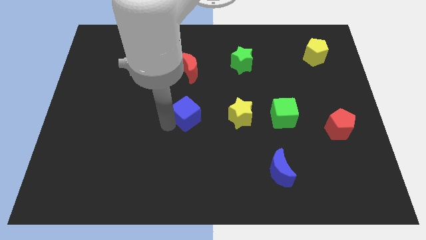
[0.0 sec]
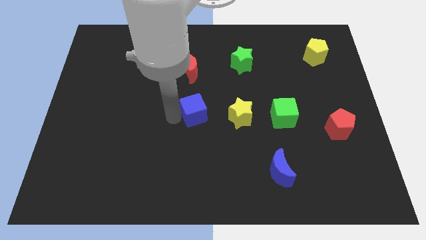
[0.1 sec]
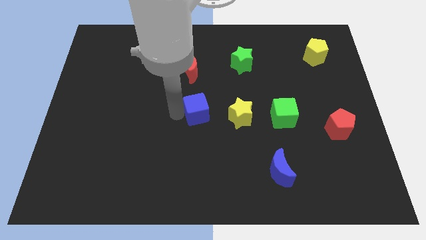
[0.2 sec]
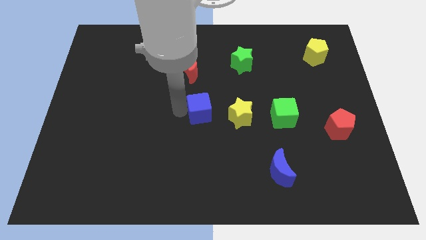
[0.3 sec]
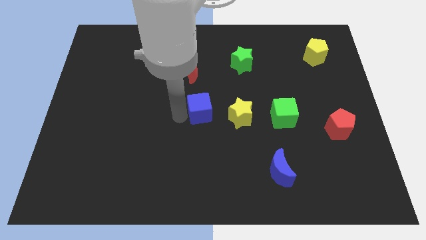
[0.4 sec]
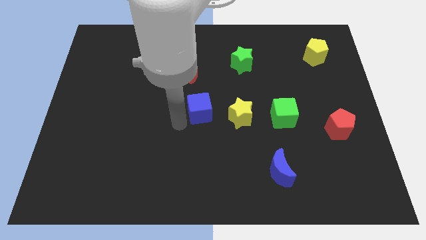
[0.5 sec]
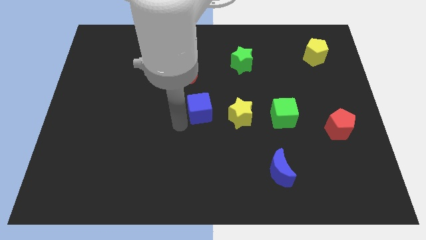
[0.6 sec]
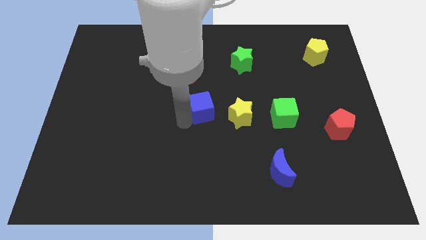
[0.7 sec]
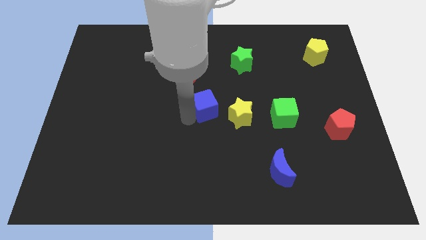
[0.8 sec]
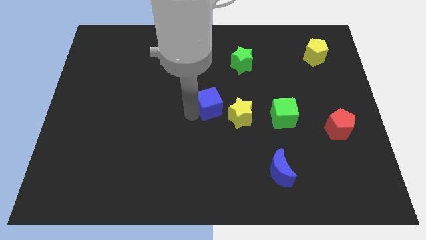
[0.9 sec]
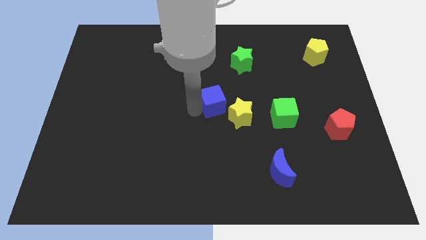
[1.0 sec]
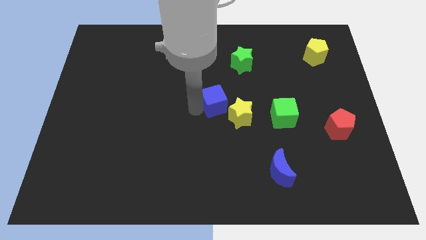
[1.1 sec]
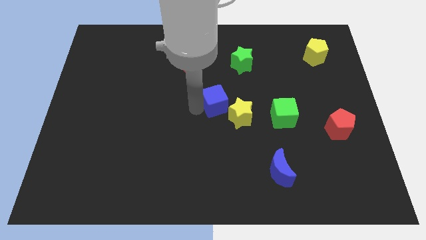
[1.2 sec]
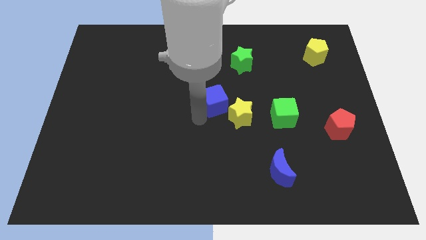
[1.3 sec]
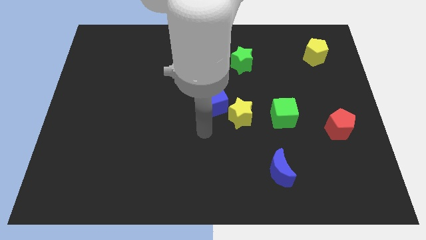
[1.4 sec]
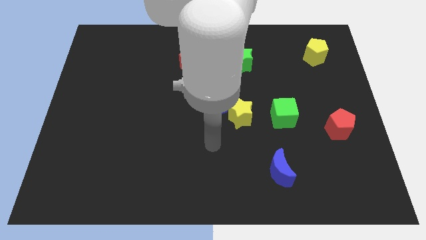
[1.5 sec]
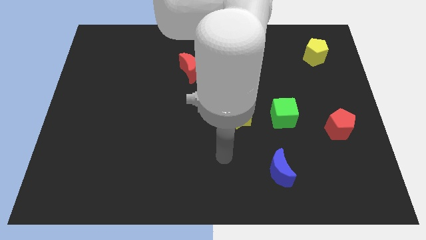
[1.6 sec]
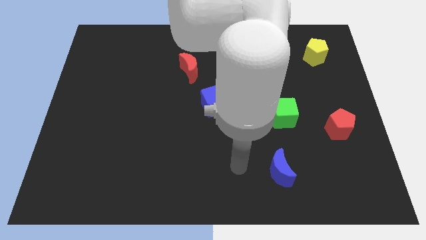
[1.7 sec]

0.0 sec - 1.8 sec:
move the blue cube to the top left of the yellow star

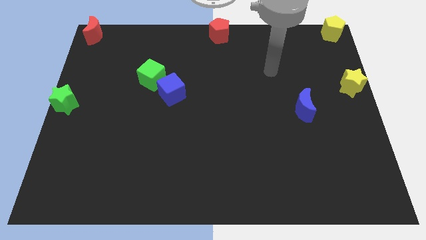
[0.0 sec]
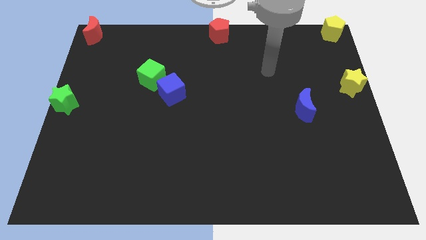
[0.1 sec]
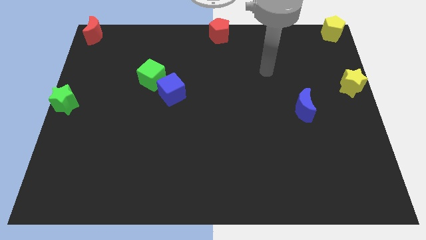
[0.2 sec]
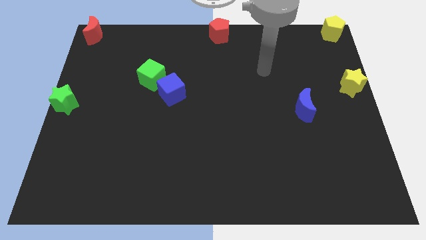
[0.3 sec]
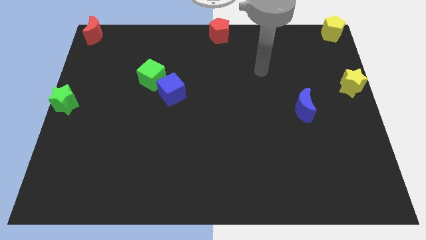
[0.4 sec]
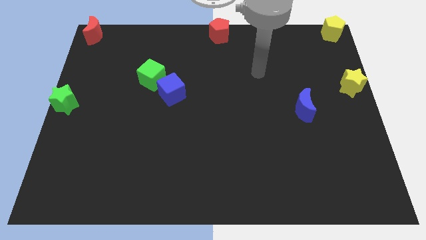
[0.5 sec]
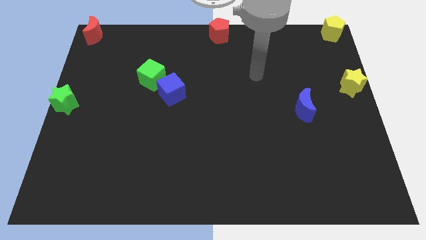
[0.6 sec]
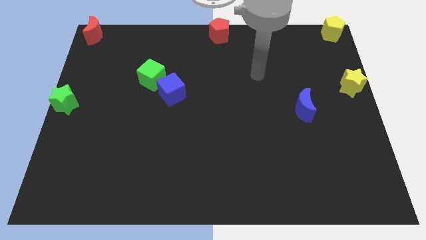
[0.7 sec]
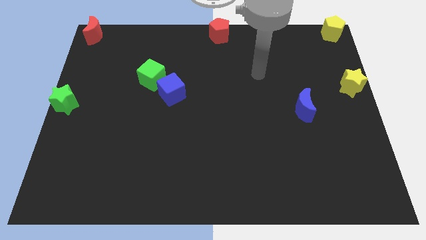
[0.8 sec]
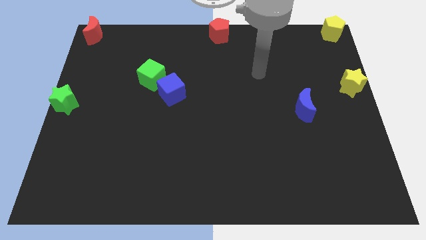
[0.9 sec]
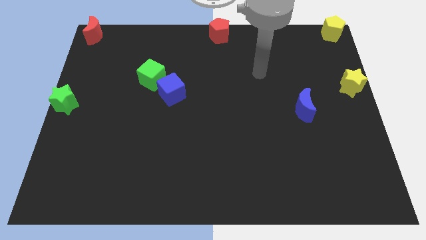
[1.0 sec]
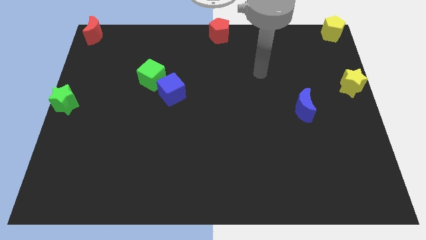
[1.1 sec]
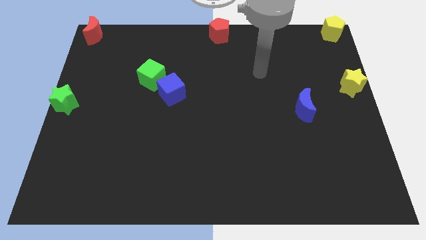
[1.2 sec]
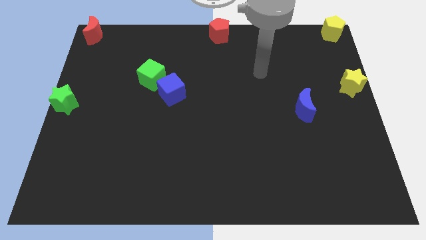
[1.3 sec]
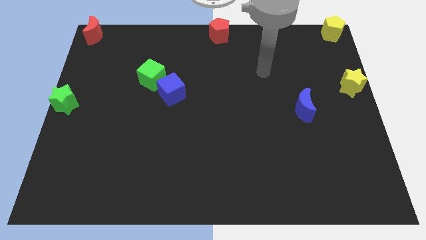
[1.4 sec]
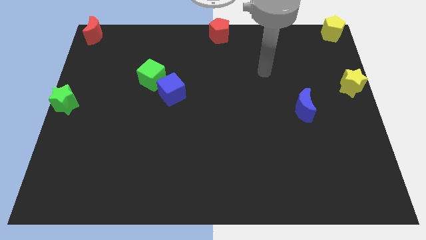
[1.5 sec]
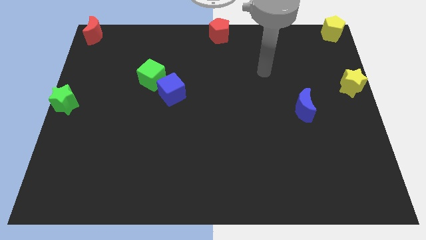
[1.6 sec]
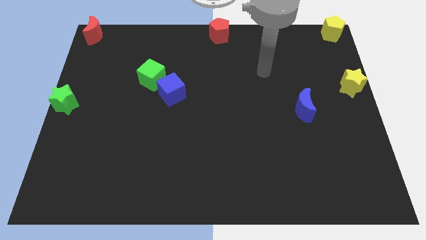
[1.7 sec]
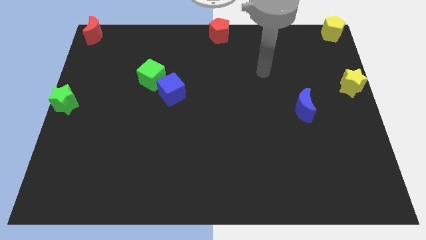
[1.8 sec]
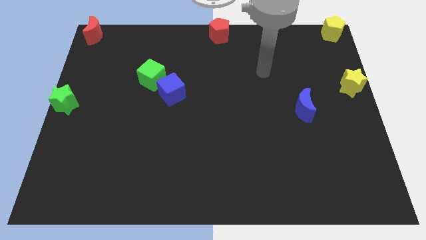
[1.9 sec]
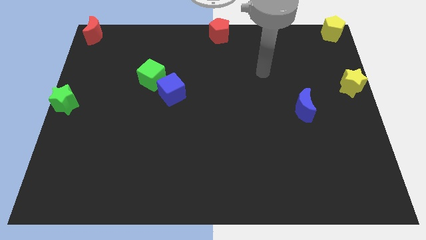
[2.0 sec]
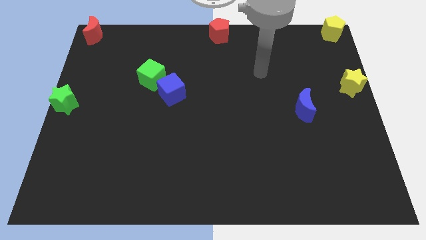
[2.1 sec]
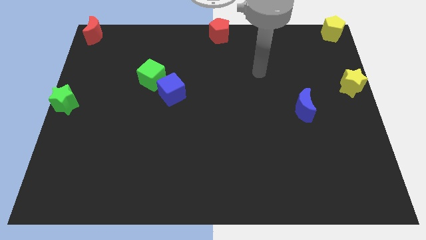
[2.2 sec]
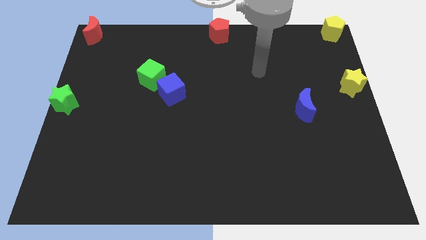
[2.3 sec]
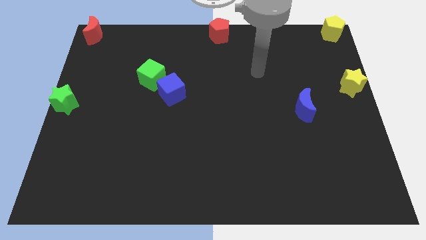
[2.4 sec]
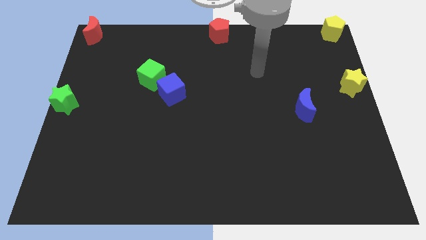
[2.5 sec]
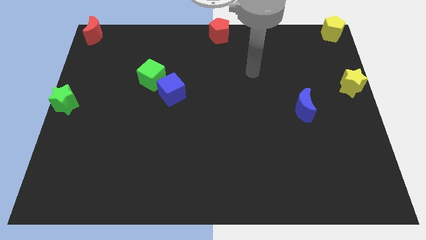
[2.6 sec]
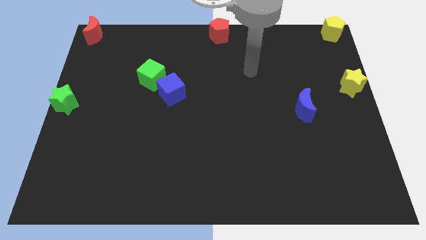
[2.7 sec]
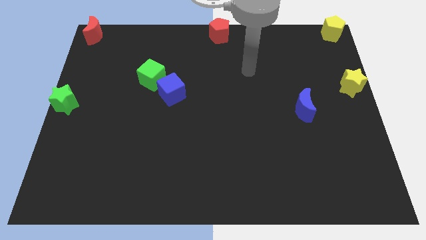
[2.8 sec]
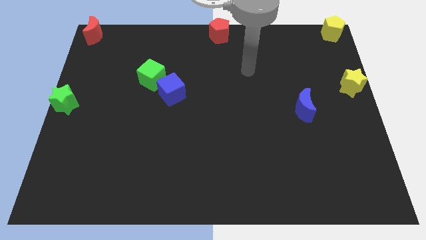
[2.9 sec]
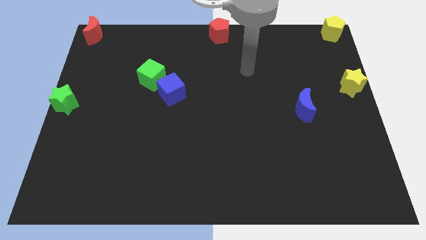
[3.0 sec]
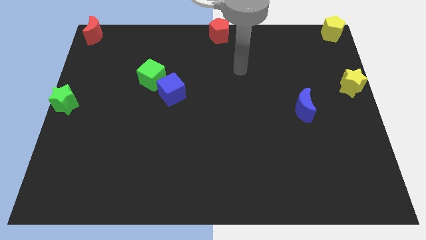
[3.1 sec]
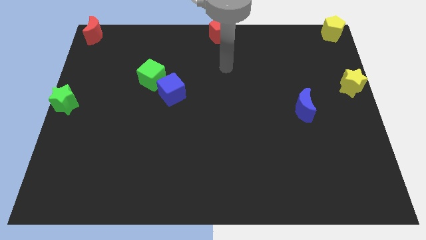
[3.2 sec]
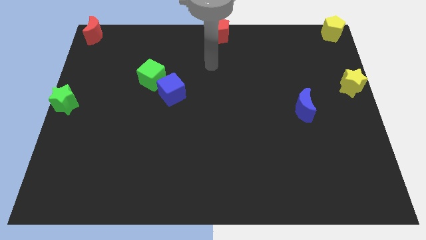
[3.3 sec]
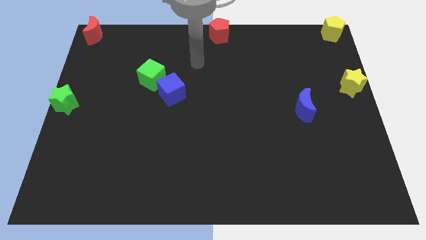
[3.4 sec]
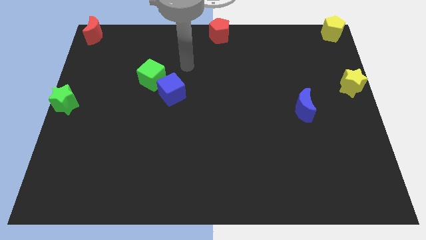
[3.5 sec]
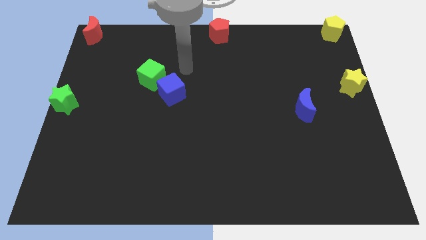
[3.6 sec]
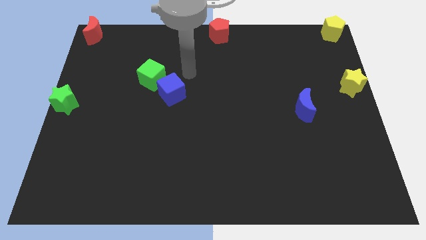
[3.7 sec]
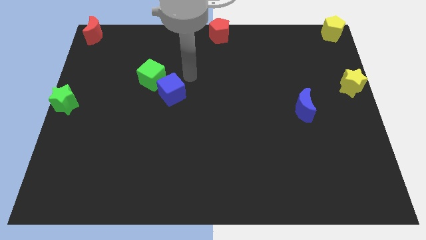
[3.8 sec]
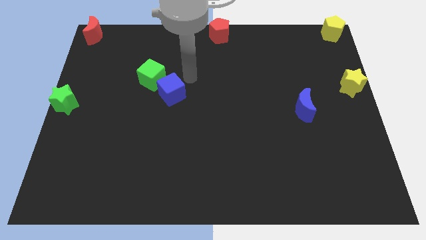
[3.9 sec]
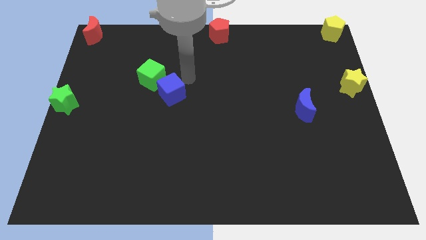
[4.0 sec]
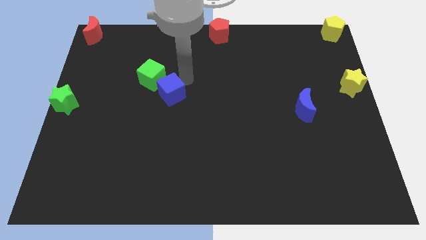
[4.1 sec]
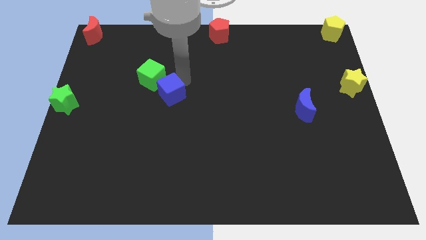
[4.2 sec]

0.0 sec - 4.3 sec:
move your arm towards the blue cube

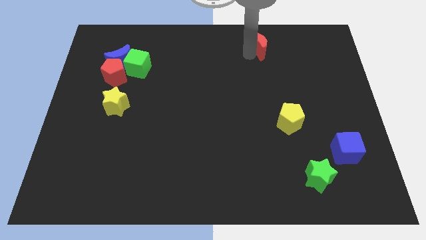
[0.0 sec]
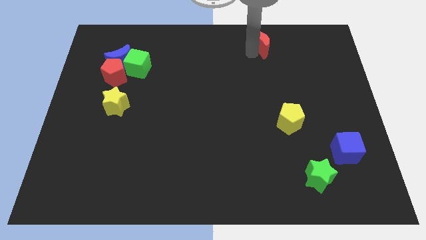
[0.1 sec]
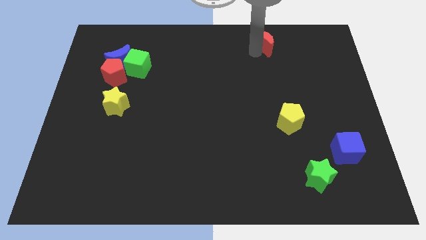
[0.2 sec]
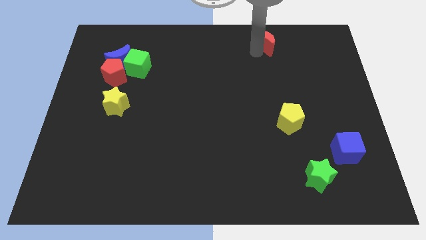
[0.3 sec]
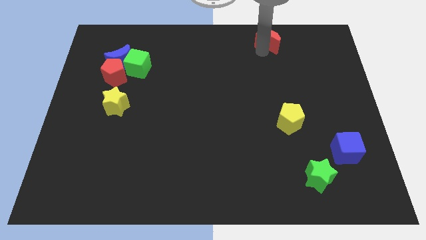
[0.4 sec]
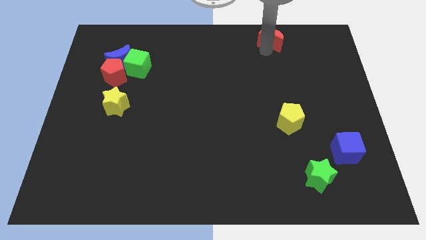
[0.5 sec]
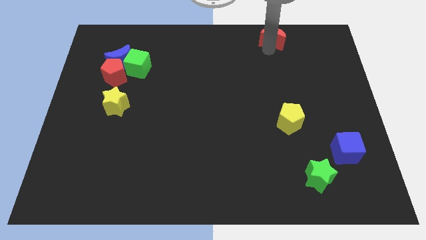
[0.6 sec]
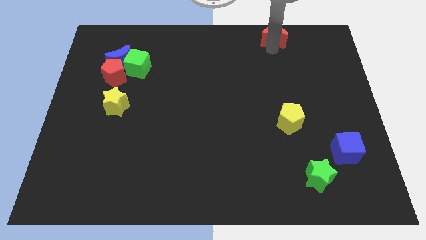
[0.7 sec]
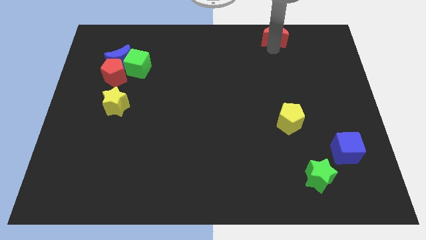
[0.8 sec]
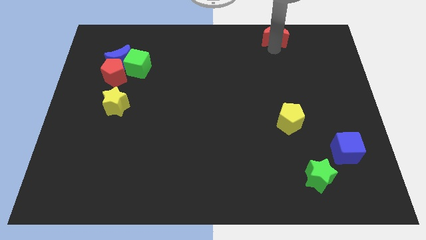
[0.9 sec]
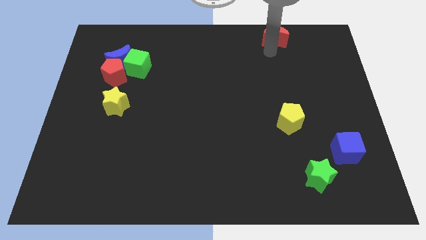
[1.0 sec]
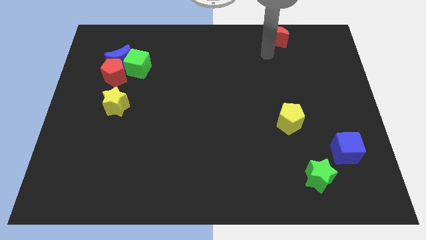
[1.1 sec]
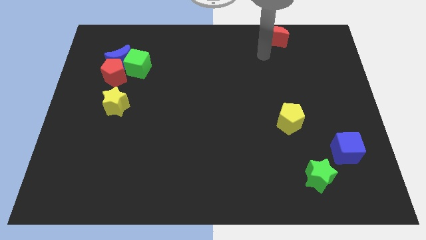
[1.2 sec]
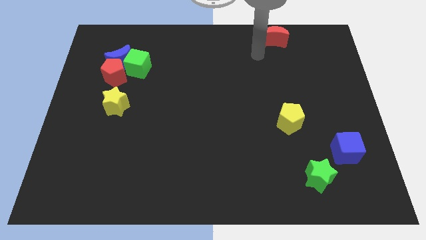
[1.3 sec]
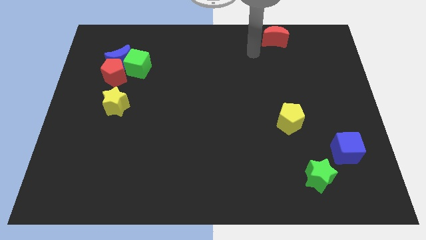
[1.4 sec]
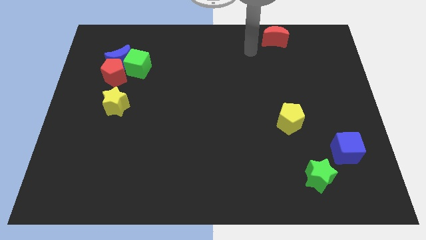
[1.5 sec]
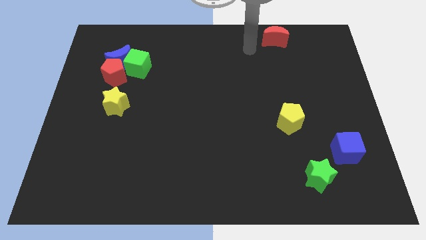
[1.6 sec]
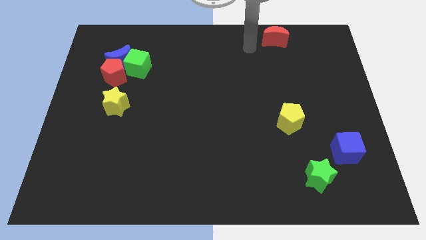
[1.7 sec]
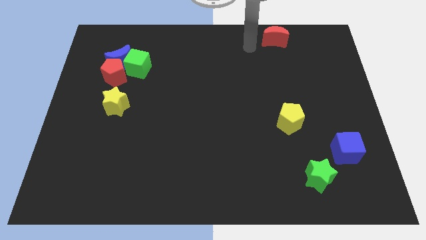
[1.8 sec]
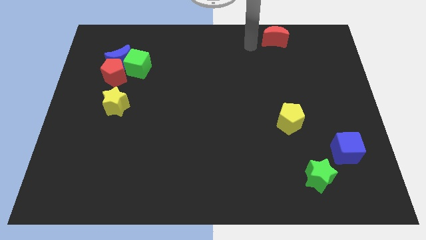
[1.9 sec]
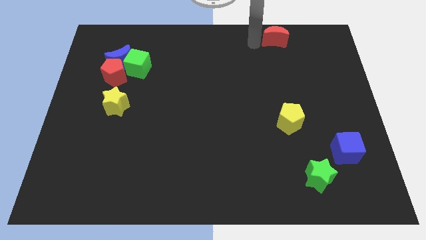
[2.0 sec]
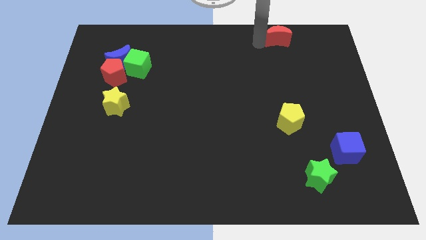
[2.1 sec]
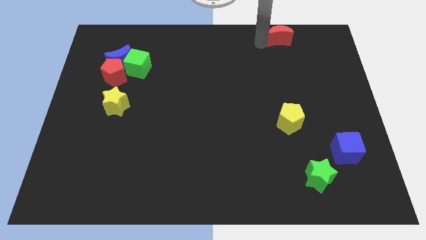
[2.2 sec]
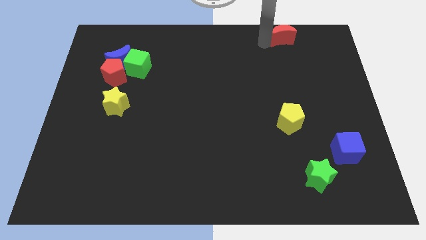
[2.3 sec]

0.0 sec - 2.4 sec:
push the red moon to the vertical top of the yellow pentagon

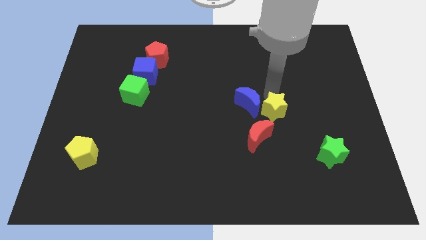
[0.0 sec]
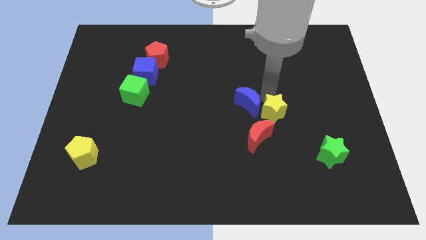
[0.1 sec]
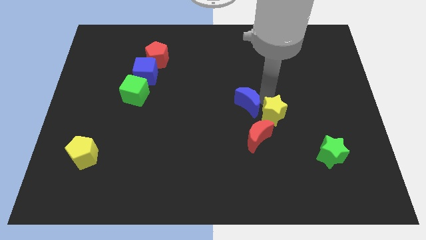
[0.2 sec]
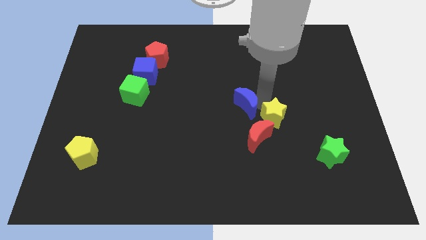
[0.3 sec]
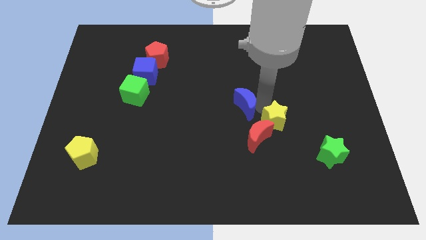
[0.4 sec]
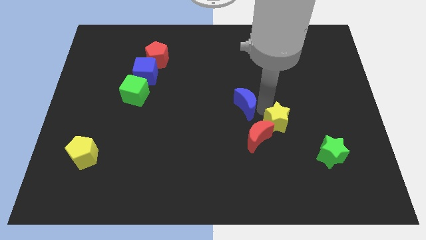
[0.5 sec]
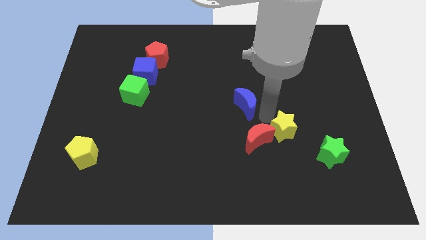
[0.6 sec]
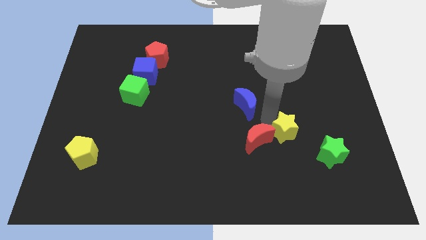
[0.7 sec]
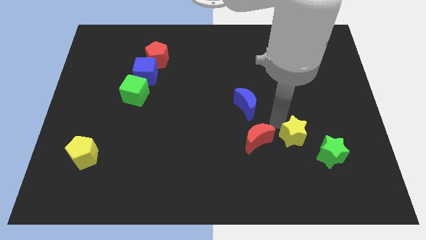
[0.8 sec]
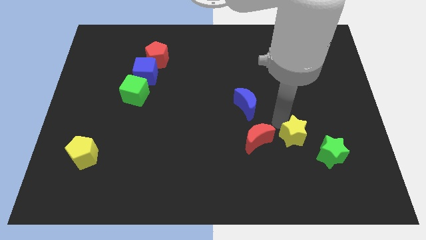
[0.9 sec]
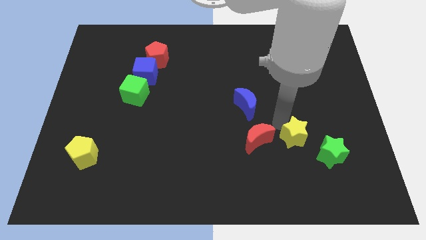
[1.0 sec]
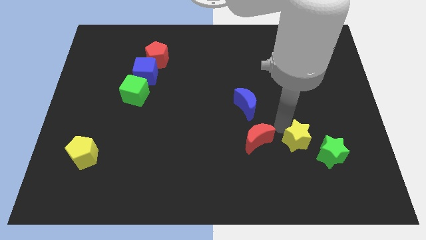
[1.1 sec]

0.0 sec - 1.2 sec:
place the yellow star in between the red moon and the green star
